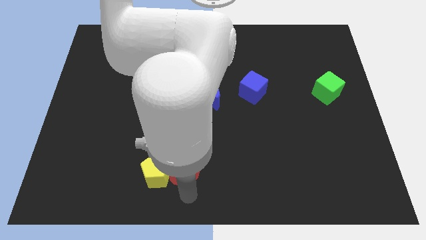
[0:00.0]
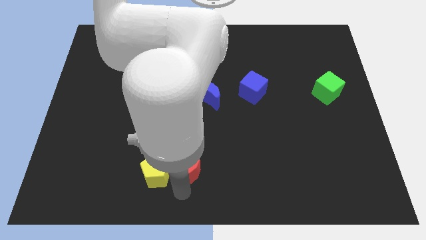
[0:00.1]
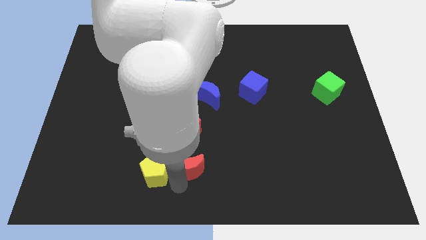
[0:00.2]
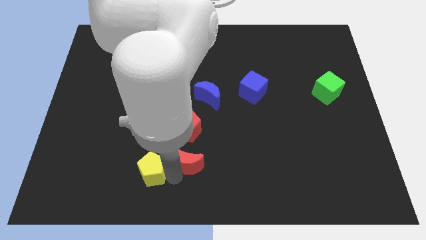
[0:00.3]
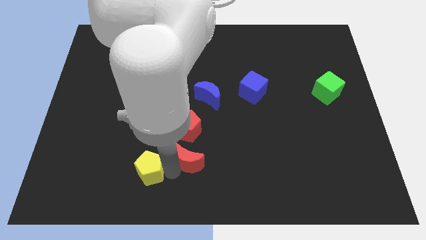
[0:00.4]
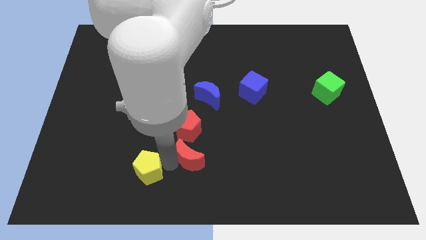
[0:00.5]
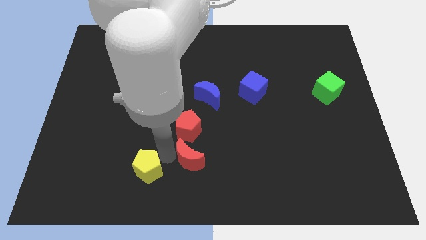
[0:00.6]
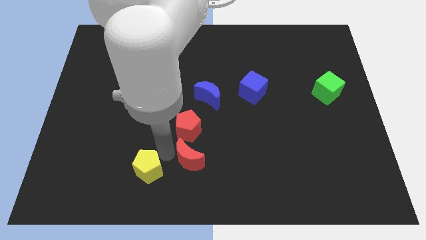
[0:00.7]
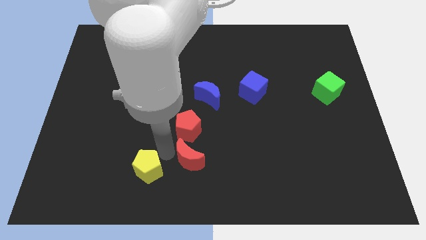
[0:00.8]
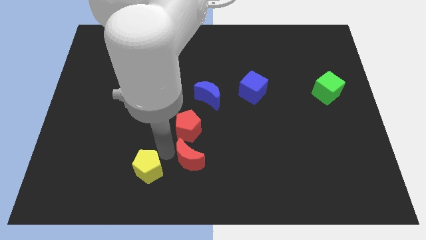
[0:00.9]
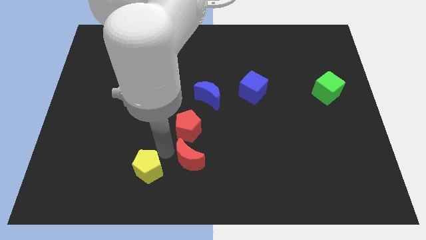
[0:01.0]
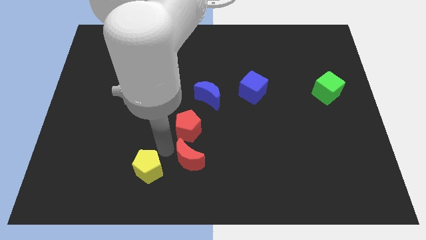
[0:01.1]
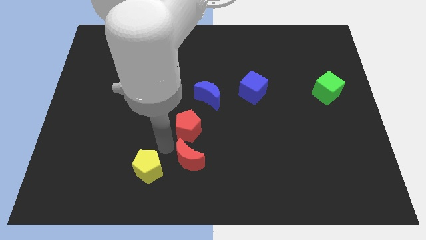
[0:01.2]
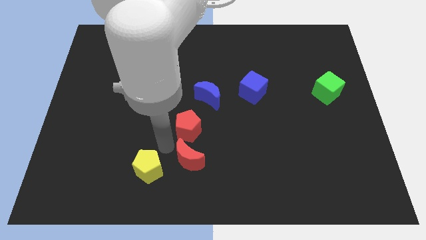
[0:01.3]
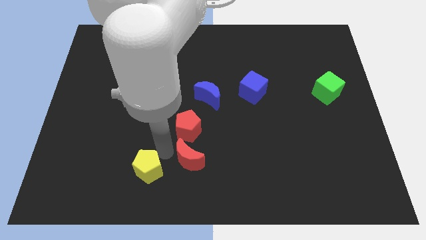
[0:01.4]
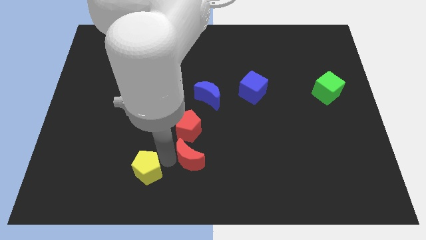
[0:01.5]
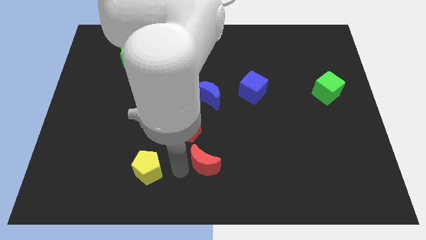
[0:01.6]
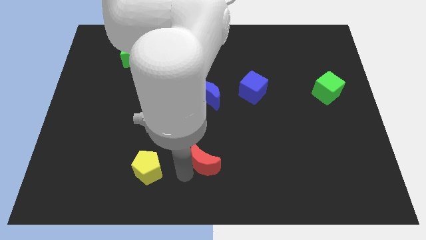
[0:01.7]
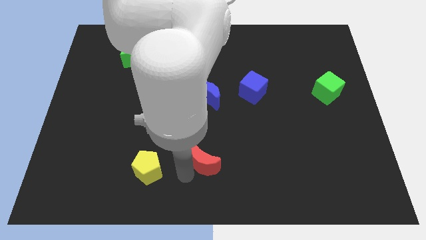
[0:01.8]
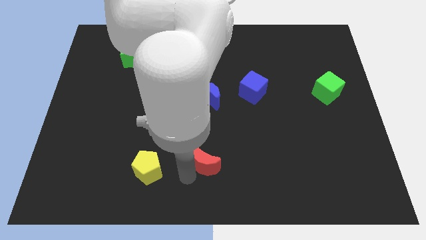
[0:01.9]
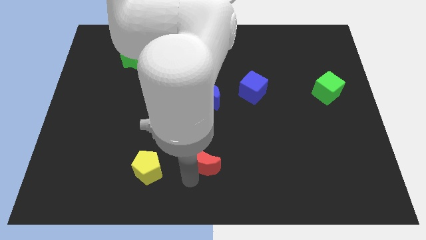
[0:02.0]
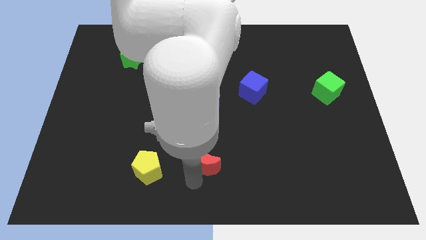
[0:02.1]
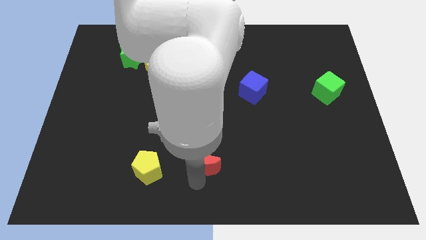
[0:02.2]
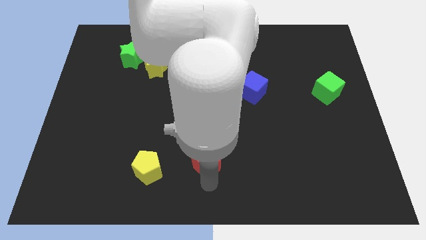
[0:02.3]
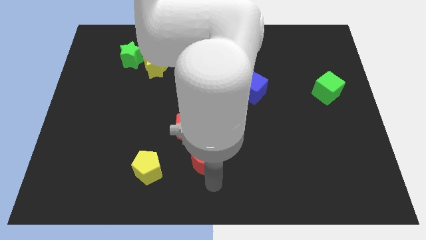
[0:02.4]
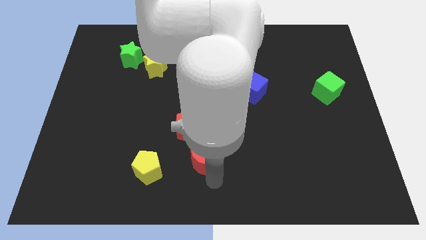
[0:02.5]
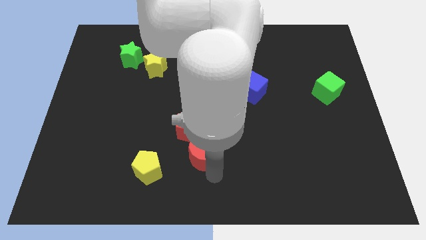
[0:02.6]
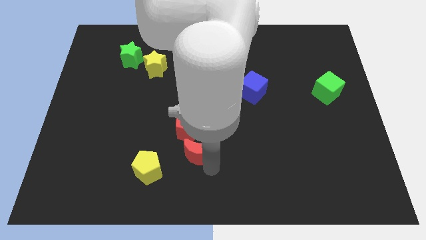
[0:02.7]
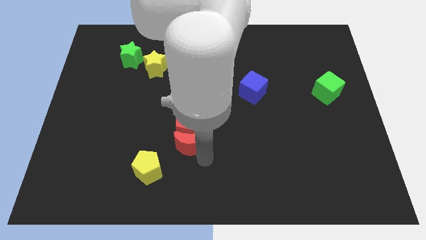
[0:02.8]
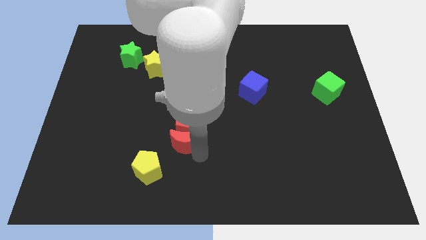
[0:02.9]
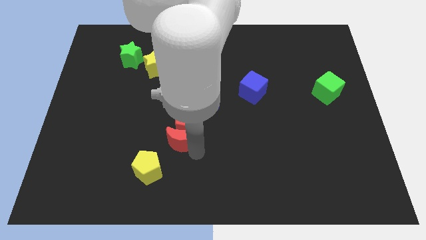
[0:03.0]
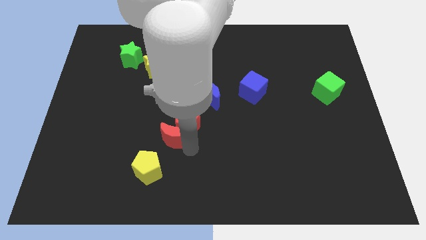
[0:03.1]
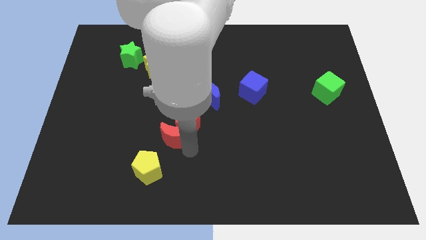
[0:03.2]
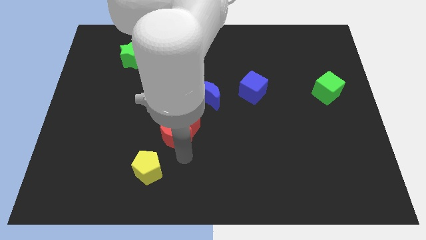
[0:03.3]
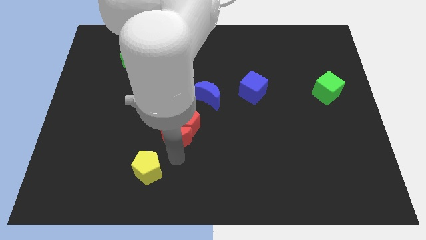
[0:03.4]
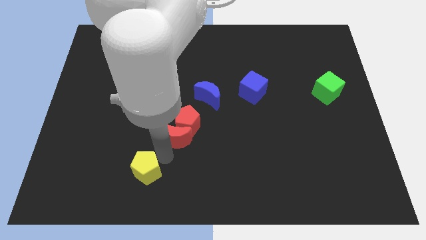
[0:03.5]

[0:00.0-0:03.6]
move the red crescent into the red pentagon

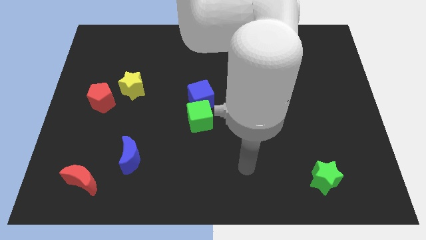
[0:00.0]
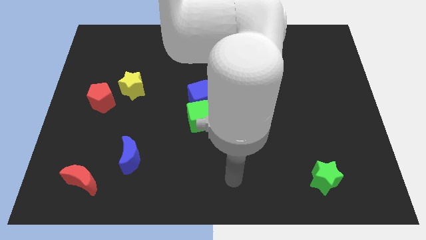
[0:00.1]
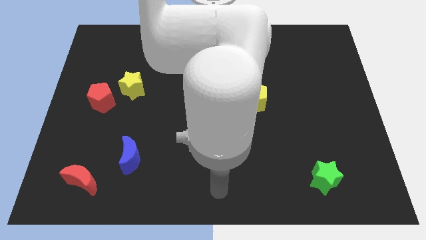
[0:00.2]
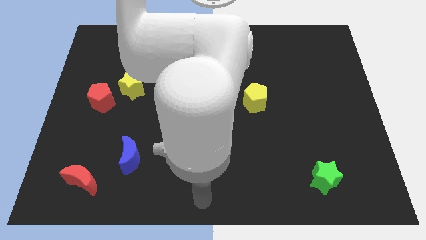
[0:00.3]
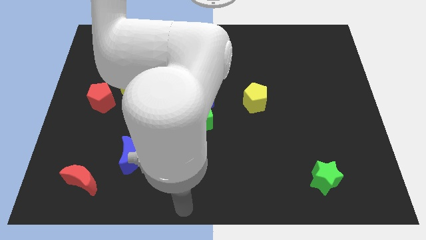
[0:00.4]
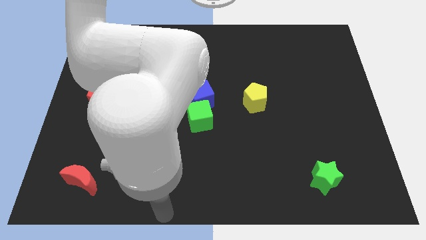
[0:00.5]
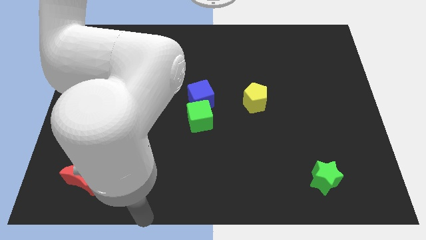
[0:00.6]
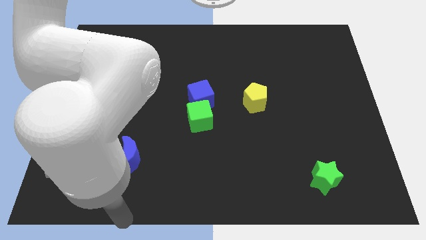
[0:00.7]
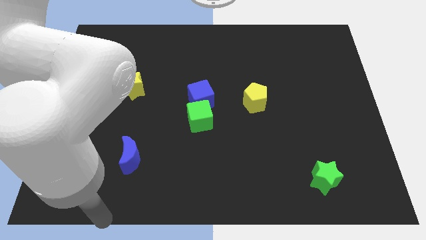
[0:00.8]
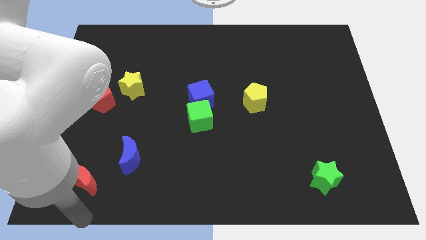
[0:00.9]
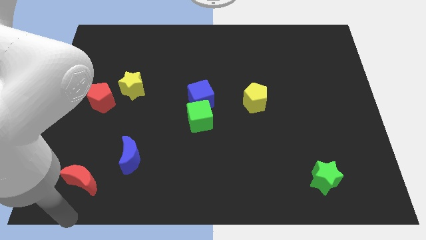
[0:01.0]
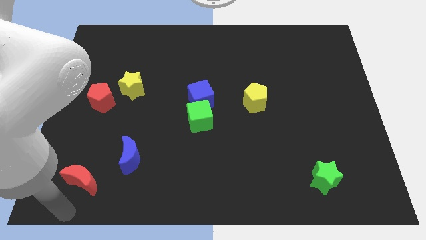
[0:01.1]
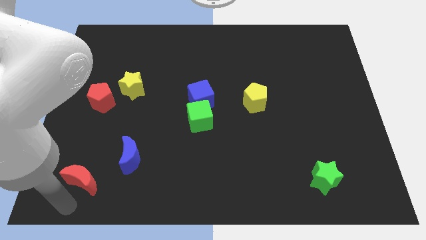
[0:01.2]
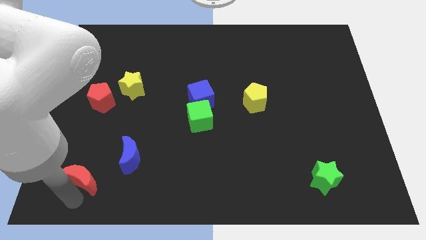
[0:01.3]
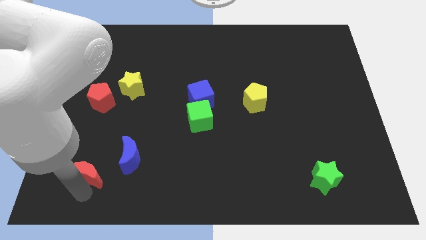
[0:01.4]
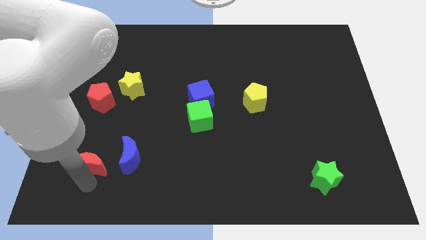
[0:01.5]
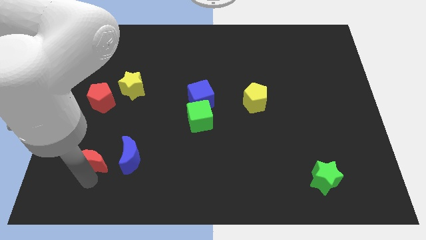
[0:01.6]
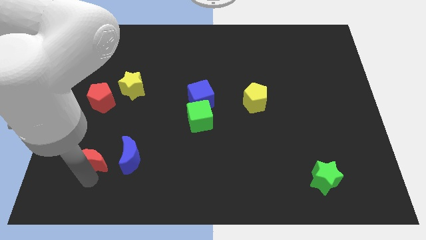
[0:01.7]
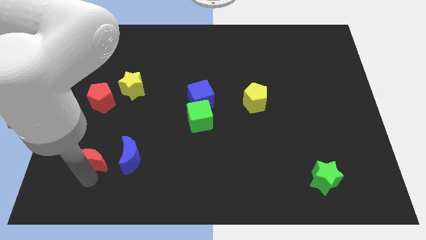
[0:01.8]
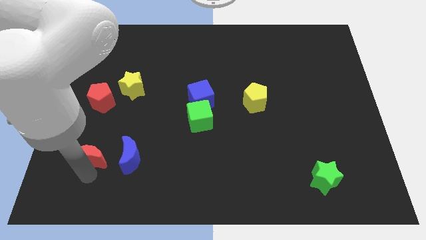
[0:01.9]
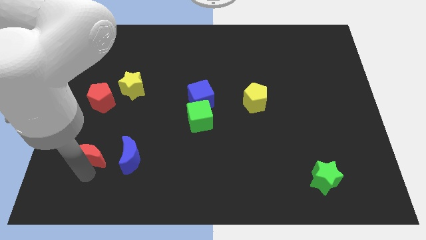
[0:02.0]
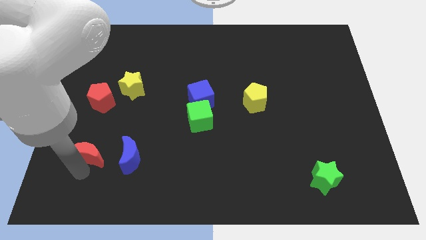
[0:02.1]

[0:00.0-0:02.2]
push the red moon to the left of blue moon

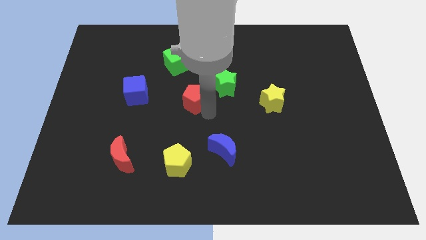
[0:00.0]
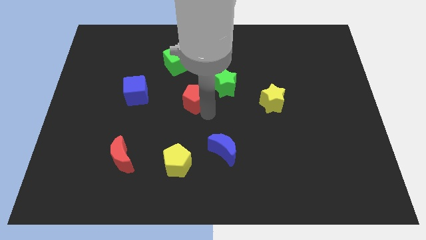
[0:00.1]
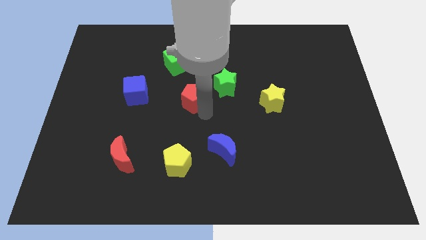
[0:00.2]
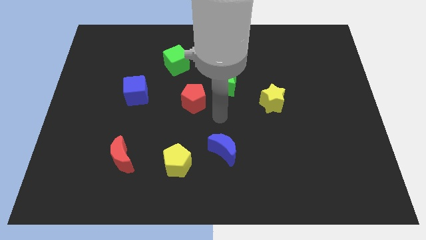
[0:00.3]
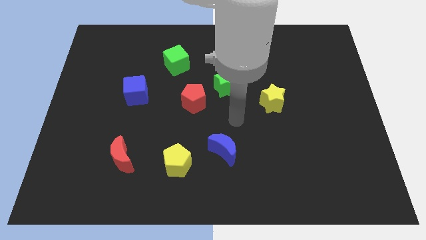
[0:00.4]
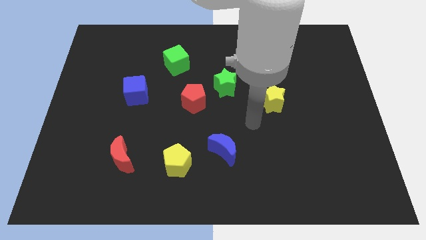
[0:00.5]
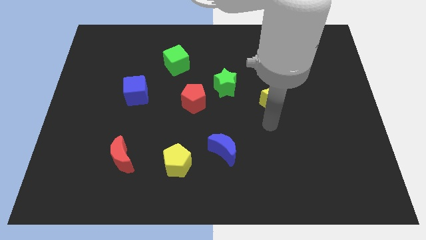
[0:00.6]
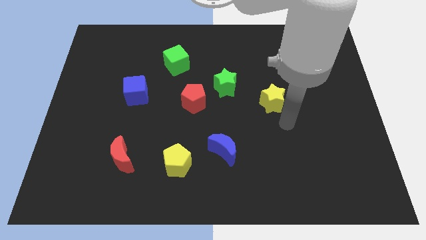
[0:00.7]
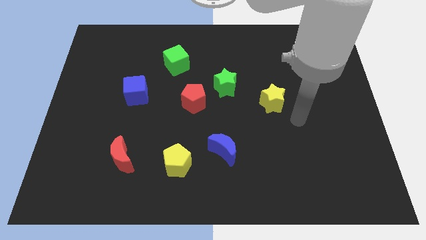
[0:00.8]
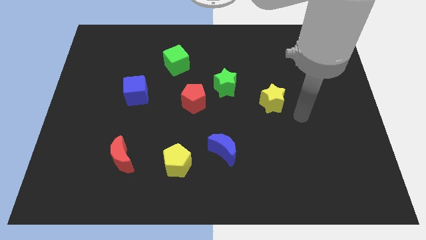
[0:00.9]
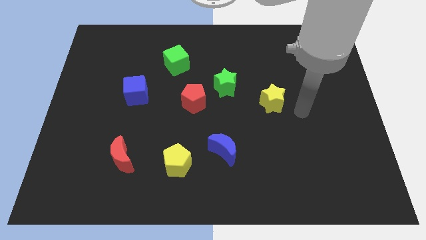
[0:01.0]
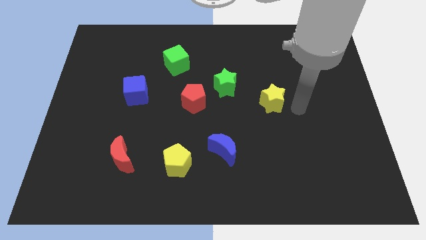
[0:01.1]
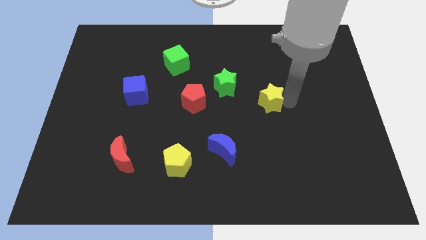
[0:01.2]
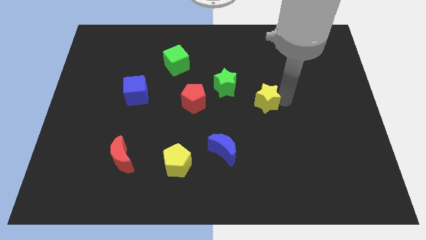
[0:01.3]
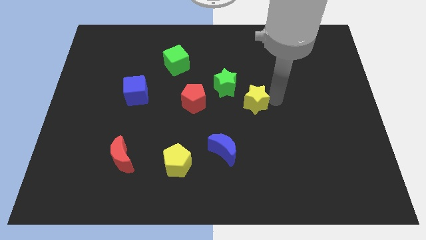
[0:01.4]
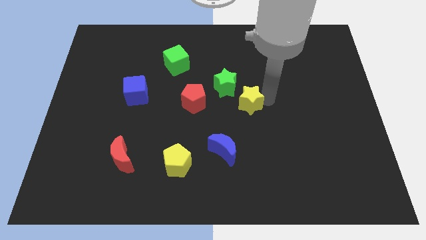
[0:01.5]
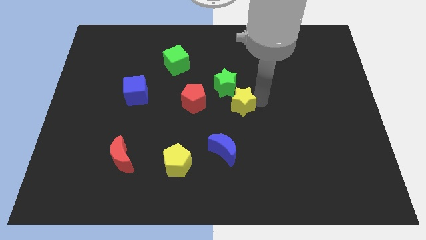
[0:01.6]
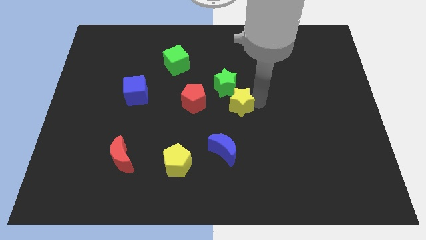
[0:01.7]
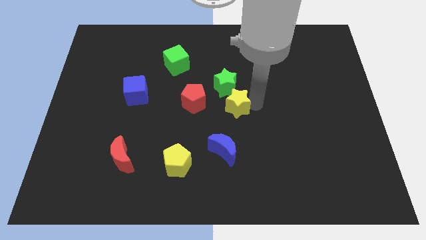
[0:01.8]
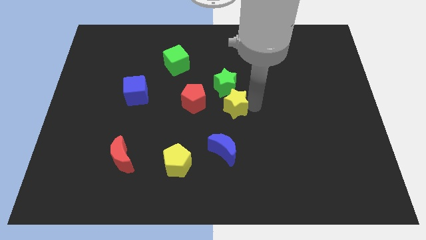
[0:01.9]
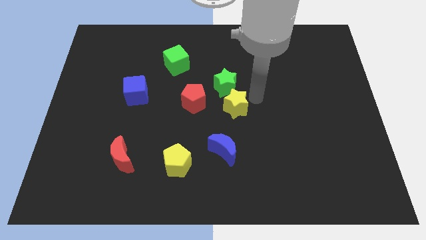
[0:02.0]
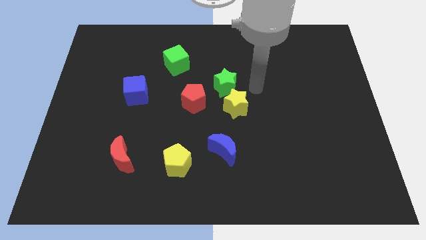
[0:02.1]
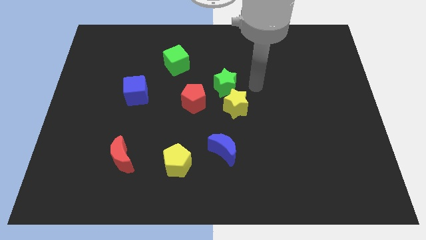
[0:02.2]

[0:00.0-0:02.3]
slide the yellow star towards the bottom of green star

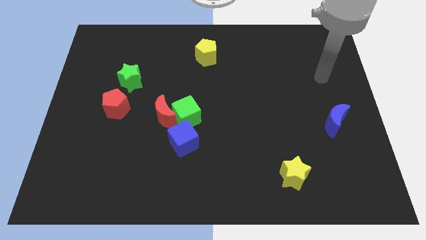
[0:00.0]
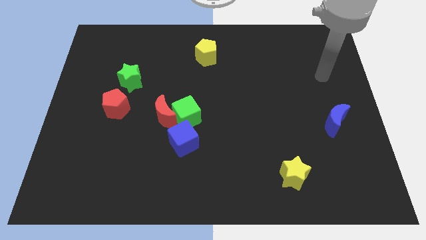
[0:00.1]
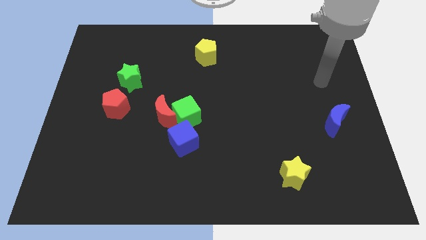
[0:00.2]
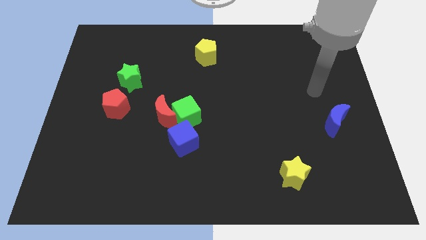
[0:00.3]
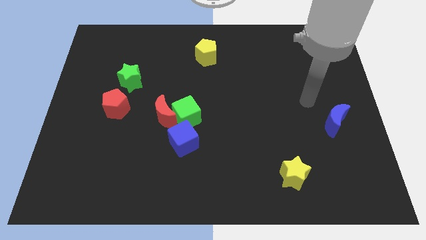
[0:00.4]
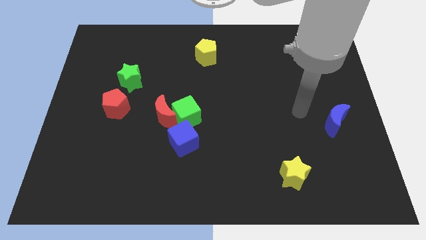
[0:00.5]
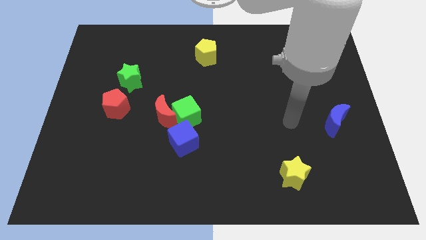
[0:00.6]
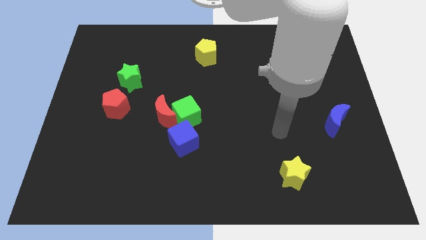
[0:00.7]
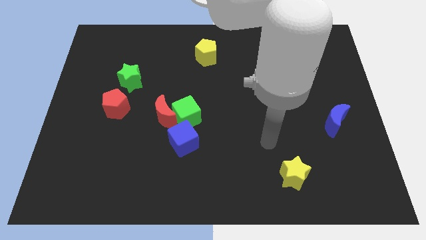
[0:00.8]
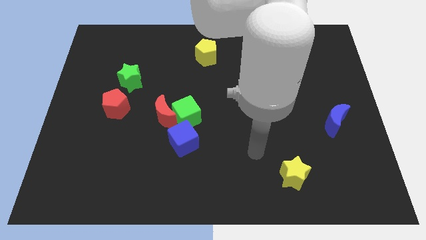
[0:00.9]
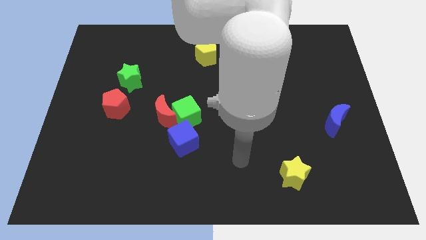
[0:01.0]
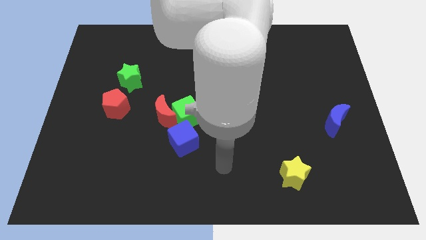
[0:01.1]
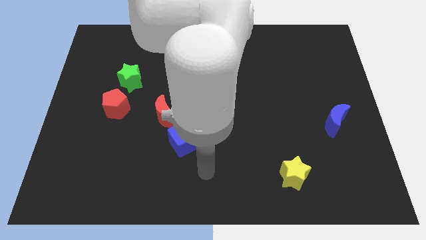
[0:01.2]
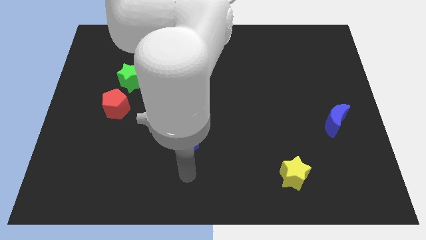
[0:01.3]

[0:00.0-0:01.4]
move your arm to the bottom of the blue cube
